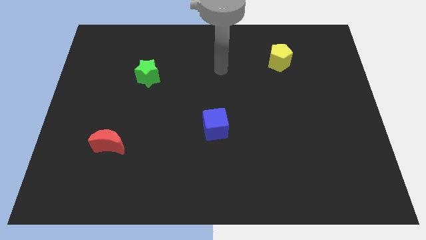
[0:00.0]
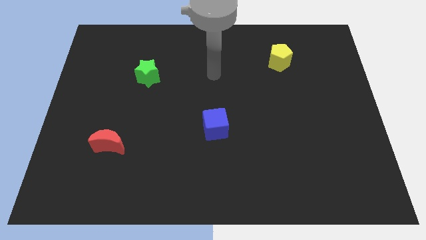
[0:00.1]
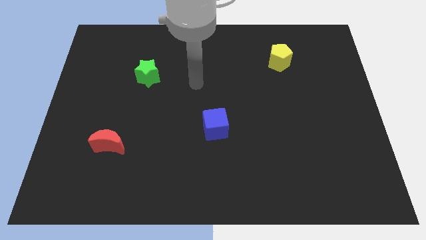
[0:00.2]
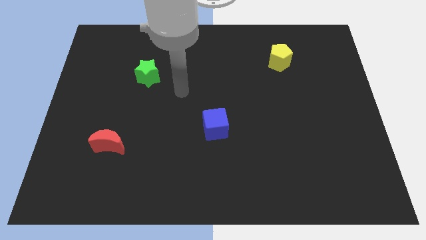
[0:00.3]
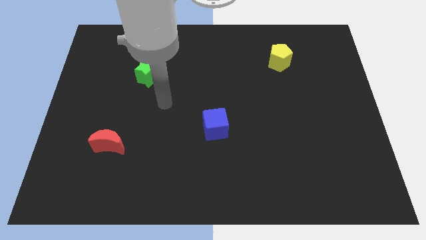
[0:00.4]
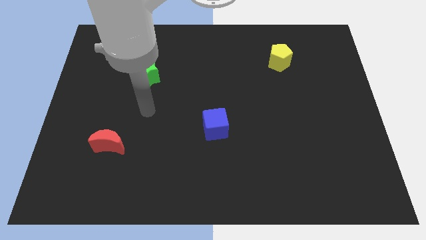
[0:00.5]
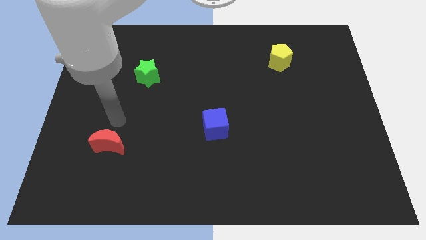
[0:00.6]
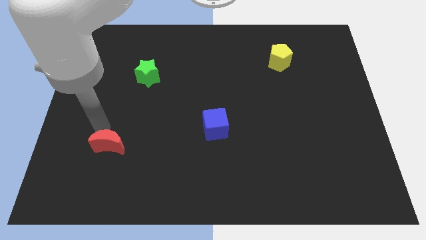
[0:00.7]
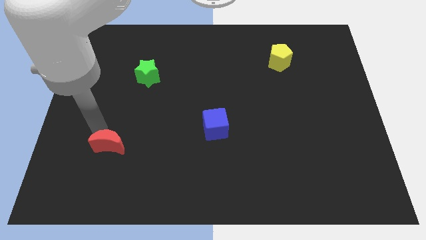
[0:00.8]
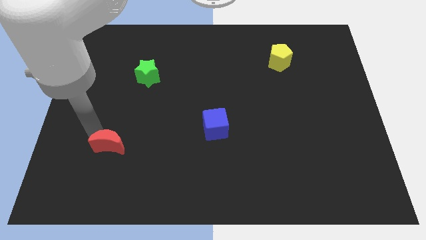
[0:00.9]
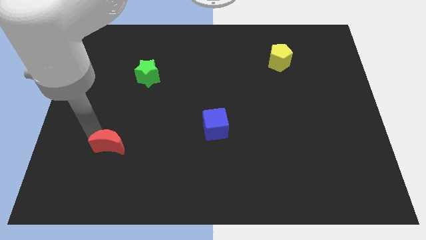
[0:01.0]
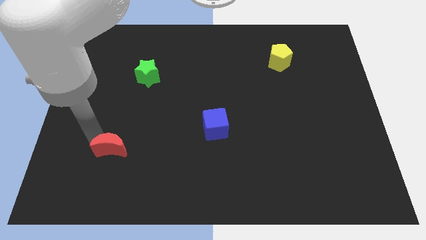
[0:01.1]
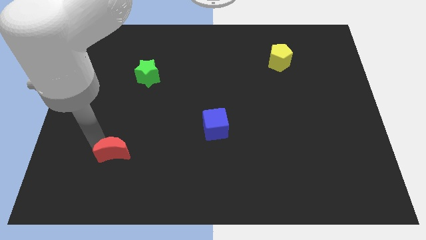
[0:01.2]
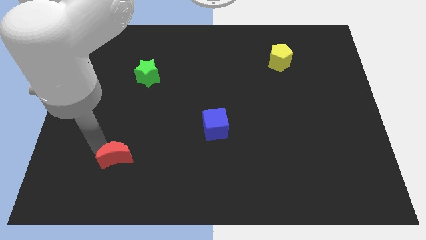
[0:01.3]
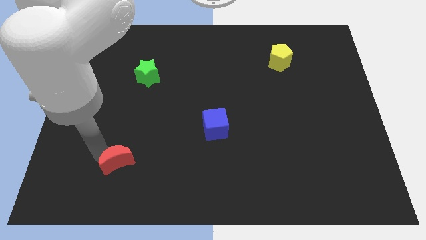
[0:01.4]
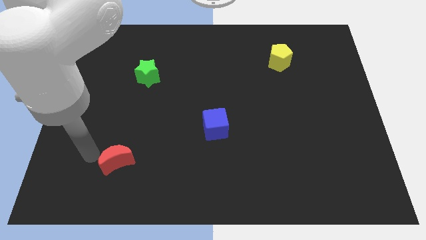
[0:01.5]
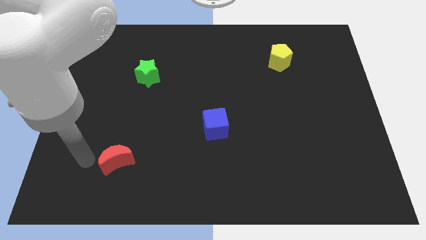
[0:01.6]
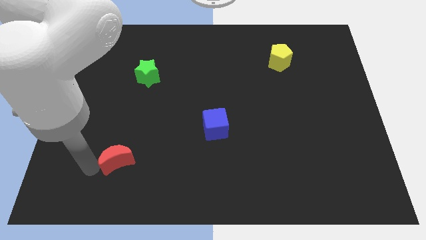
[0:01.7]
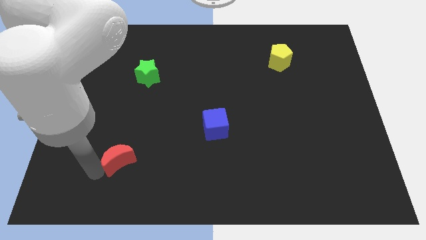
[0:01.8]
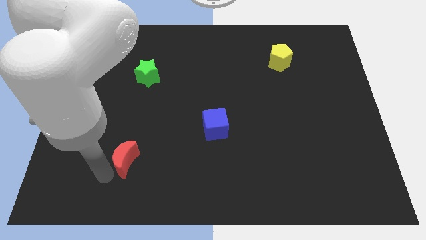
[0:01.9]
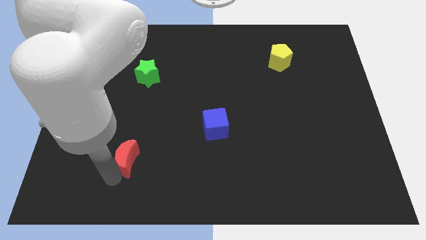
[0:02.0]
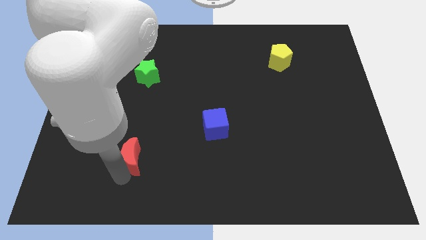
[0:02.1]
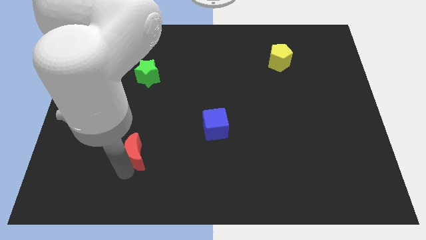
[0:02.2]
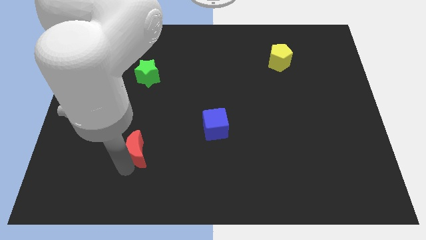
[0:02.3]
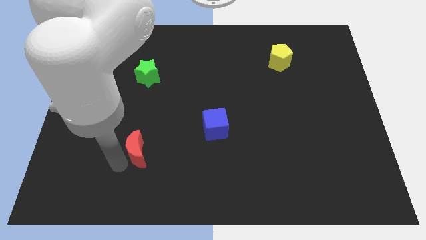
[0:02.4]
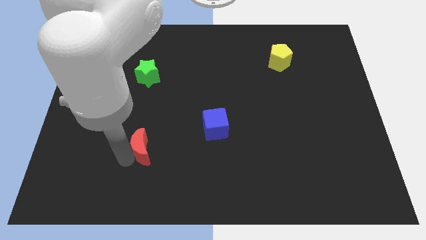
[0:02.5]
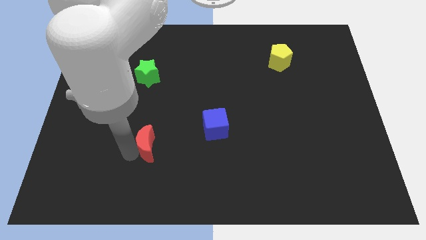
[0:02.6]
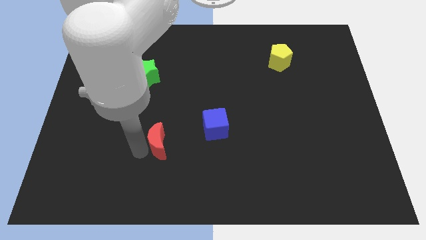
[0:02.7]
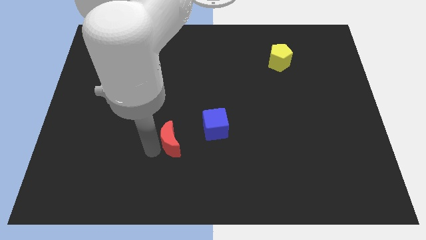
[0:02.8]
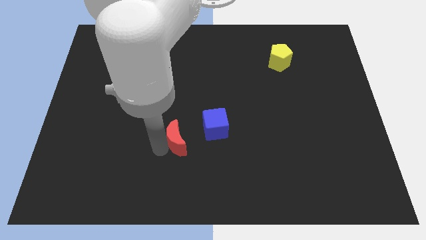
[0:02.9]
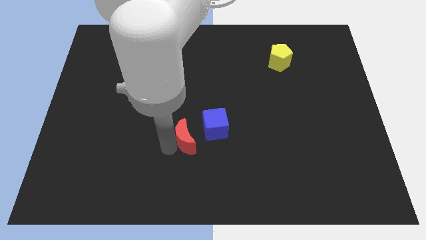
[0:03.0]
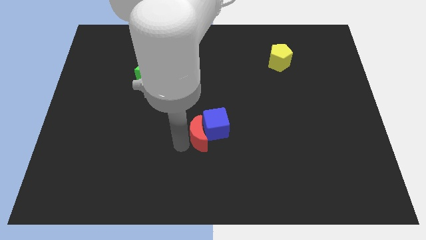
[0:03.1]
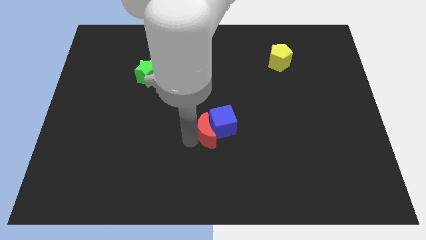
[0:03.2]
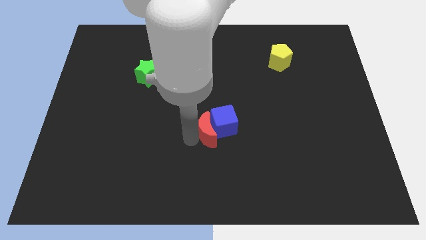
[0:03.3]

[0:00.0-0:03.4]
put the moon next to the cube

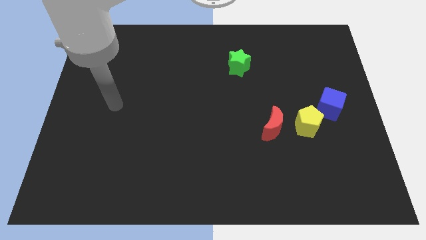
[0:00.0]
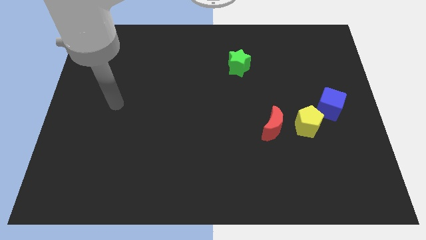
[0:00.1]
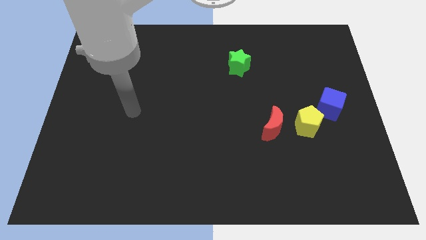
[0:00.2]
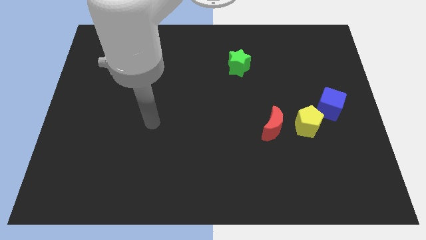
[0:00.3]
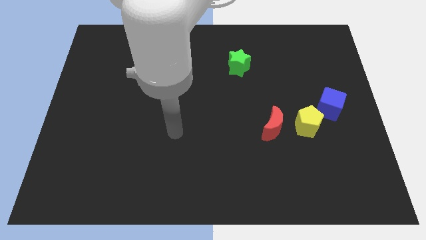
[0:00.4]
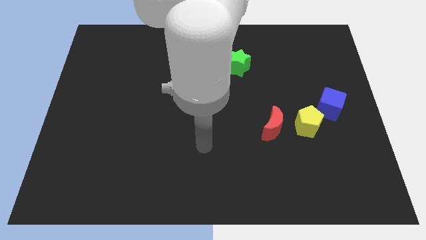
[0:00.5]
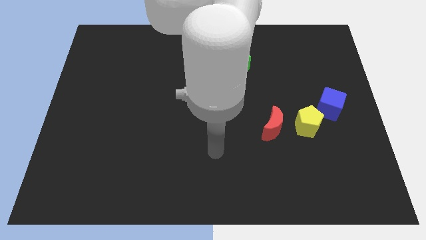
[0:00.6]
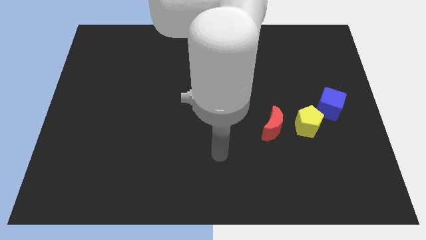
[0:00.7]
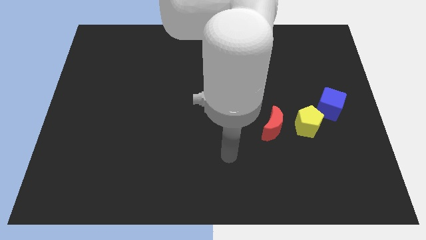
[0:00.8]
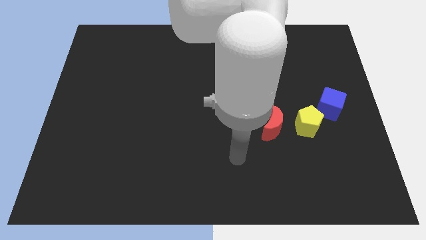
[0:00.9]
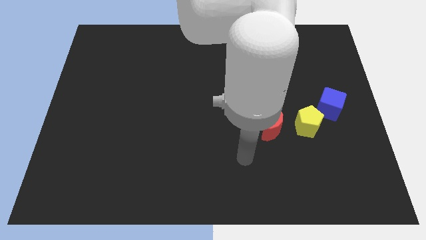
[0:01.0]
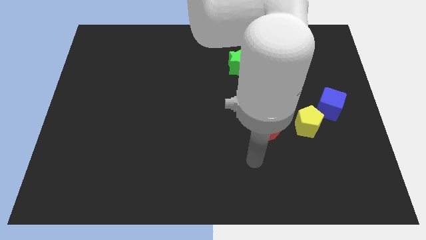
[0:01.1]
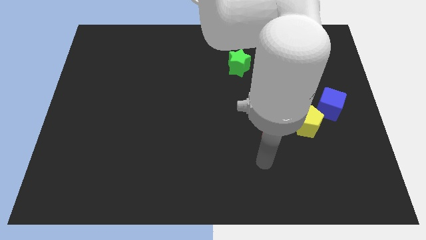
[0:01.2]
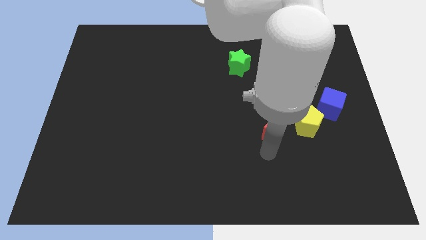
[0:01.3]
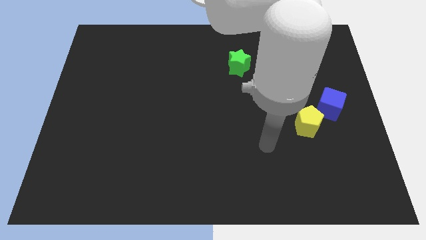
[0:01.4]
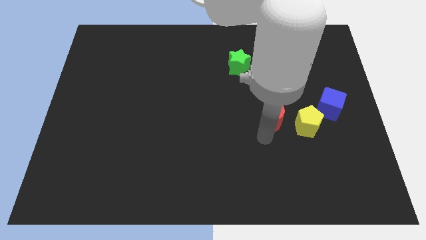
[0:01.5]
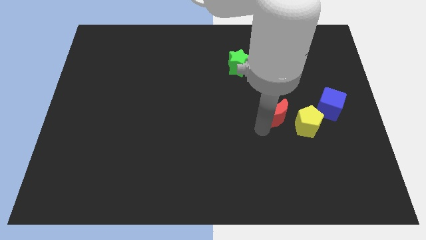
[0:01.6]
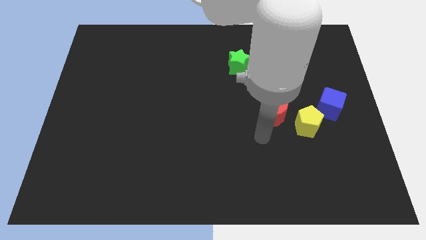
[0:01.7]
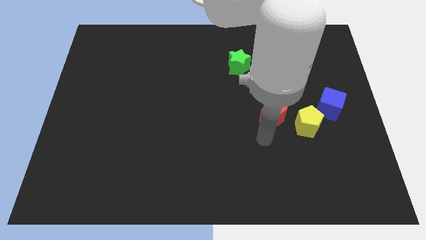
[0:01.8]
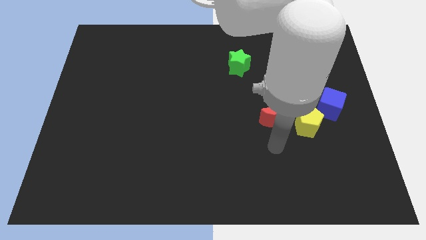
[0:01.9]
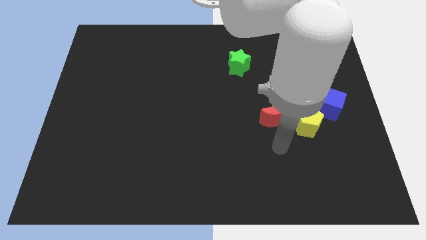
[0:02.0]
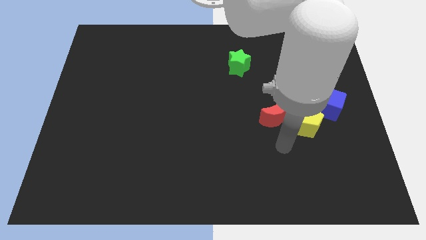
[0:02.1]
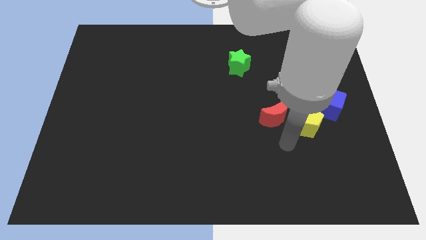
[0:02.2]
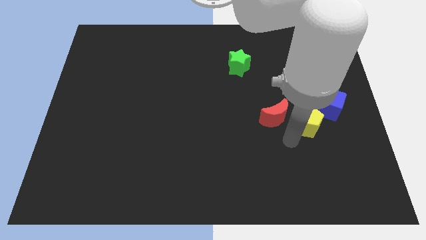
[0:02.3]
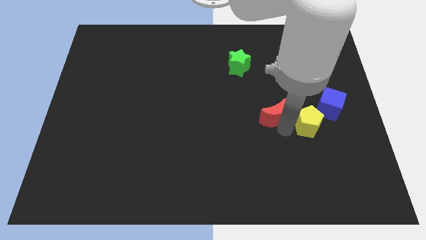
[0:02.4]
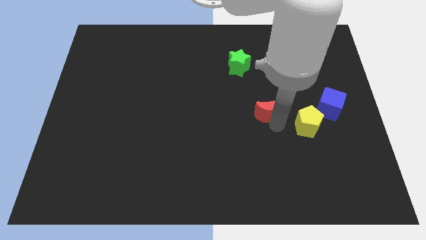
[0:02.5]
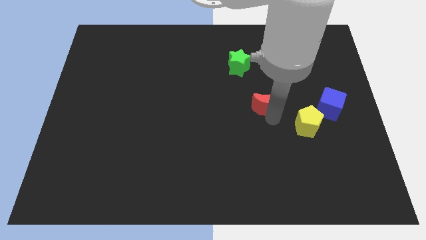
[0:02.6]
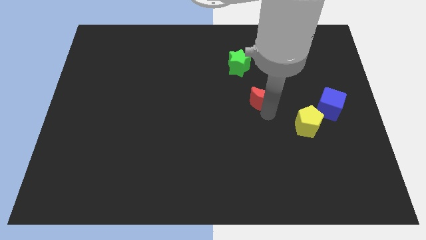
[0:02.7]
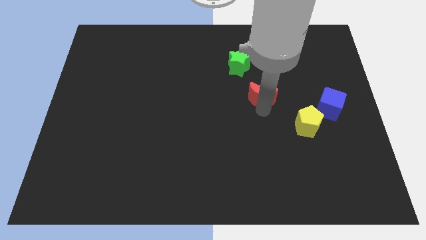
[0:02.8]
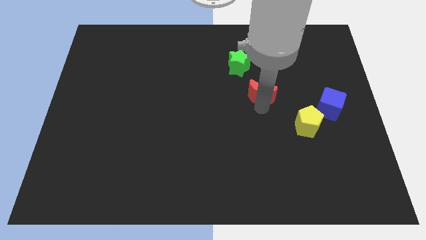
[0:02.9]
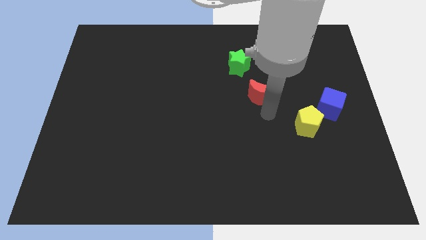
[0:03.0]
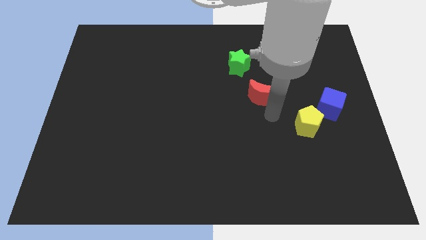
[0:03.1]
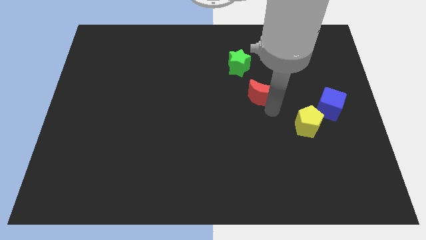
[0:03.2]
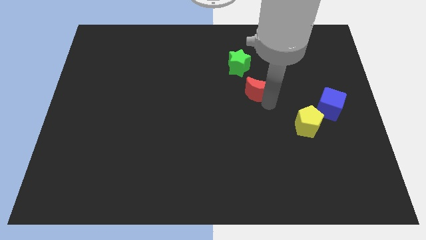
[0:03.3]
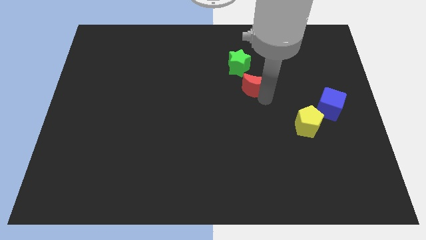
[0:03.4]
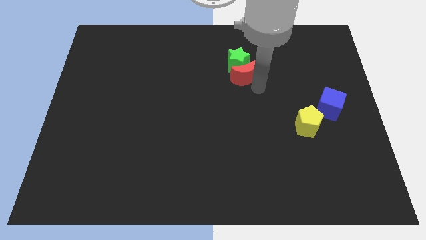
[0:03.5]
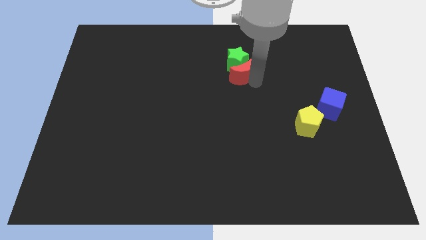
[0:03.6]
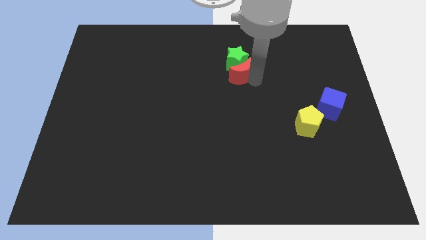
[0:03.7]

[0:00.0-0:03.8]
slide the red block to the star

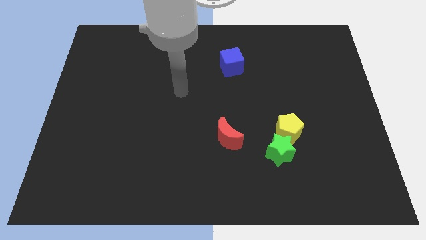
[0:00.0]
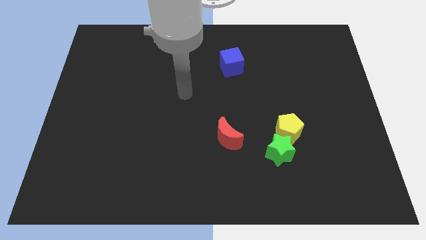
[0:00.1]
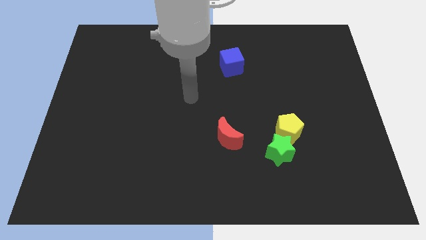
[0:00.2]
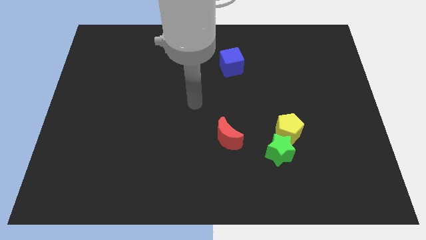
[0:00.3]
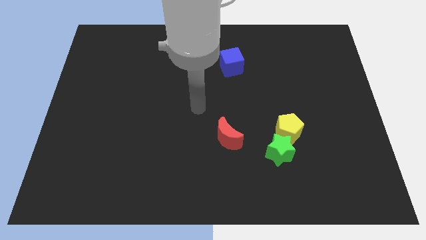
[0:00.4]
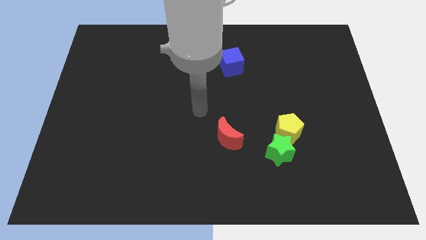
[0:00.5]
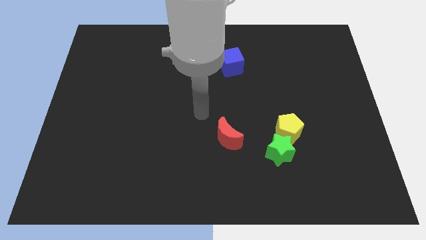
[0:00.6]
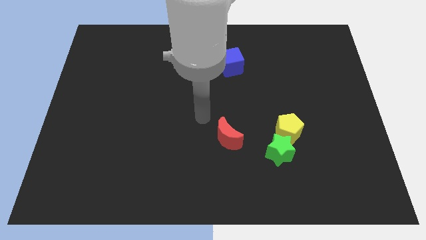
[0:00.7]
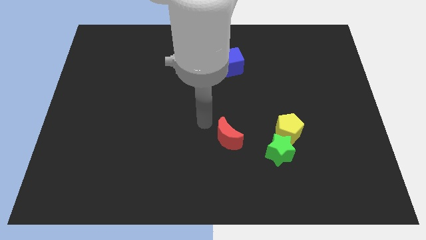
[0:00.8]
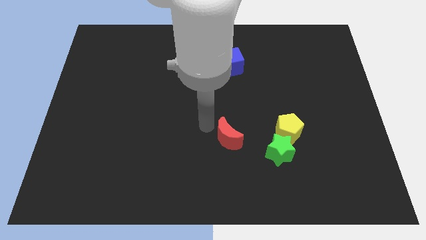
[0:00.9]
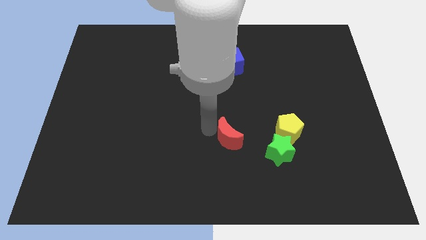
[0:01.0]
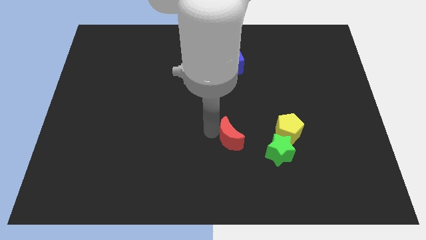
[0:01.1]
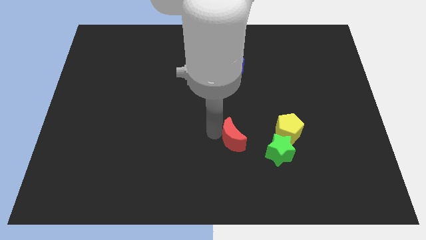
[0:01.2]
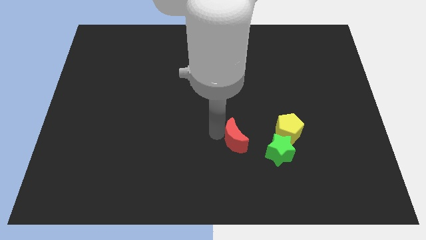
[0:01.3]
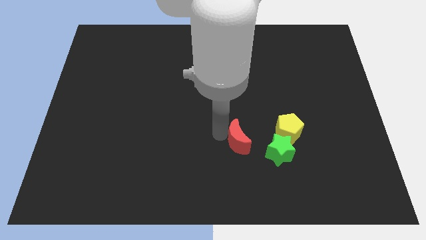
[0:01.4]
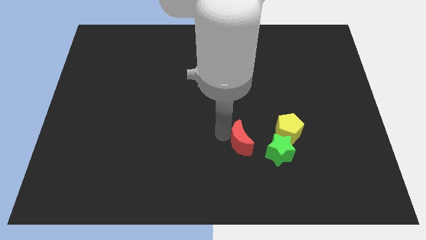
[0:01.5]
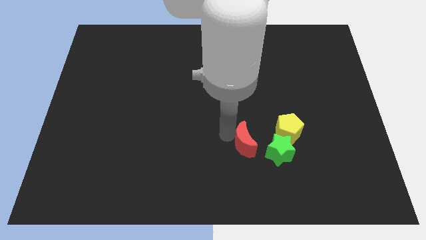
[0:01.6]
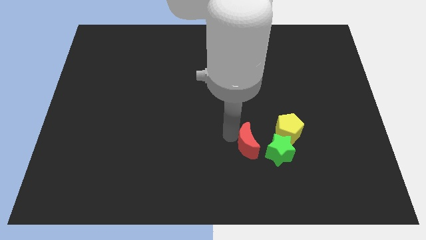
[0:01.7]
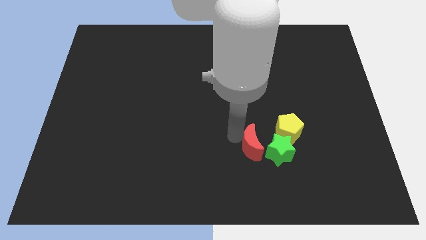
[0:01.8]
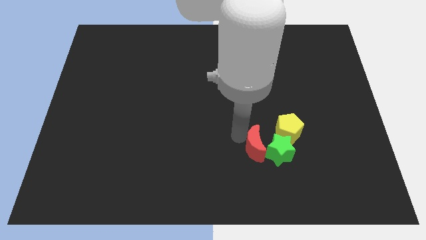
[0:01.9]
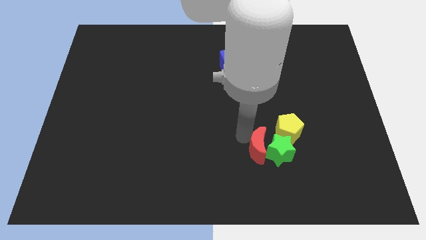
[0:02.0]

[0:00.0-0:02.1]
slide the red moon towards the green star
